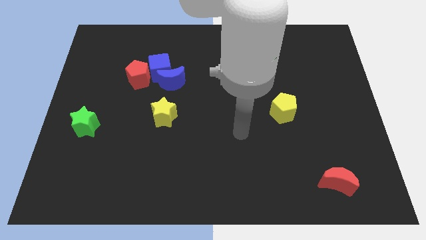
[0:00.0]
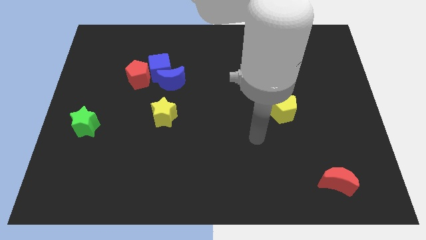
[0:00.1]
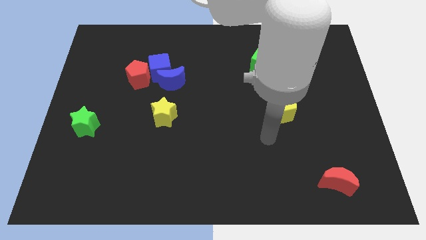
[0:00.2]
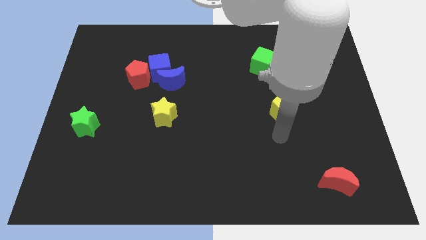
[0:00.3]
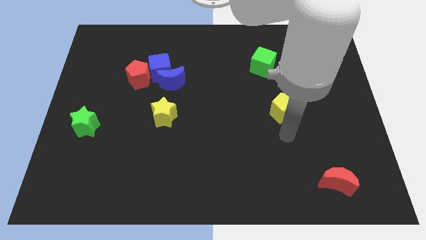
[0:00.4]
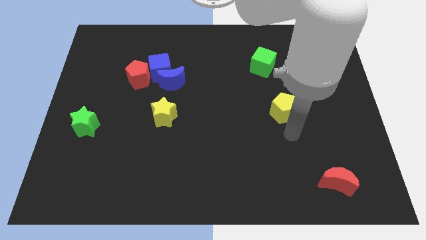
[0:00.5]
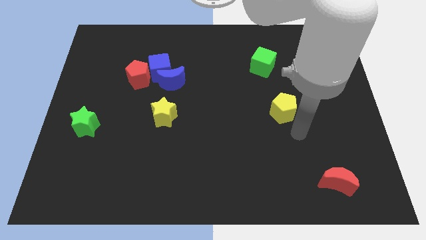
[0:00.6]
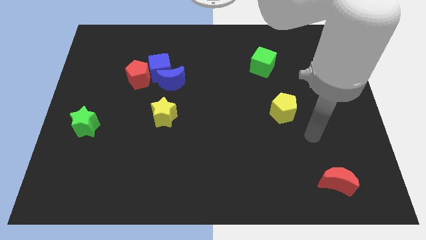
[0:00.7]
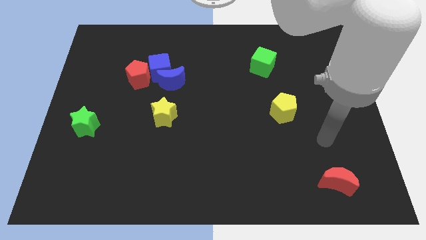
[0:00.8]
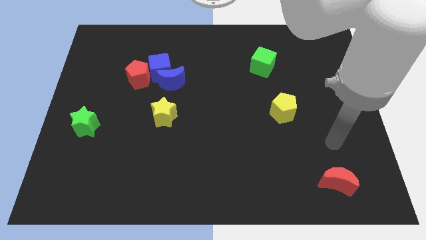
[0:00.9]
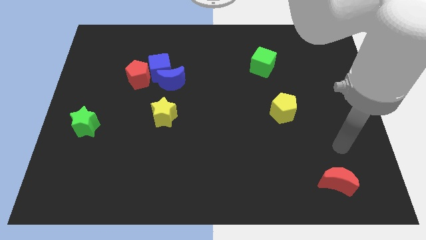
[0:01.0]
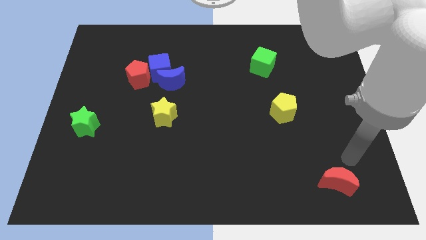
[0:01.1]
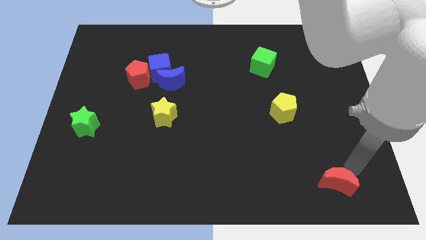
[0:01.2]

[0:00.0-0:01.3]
move your arm towards the red moon

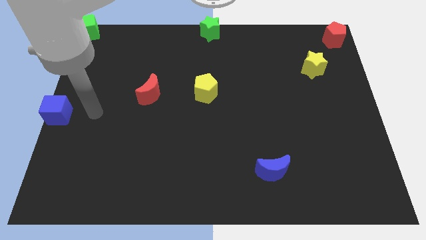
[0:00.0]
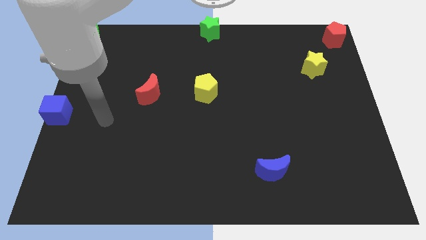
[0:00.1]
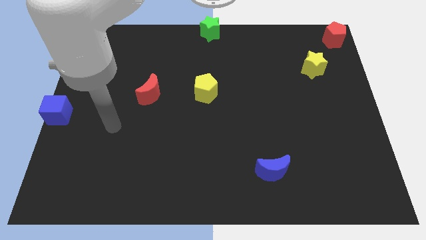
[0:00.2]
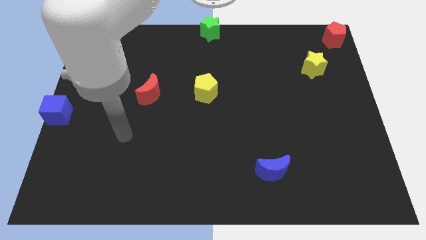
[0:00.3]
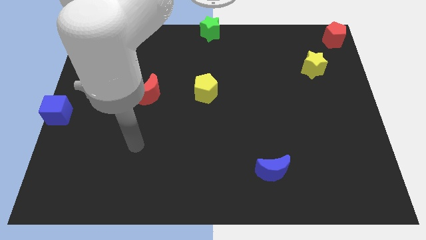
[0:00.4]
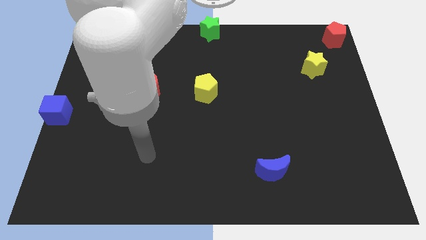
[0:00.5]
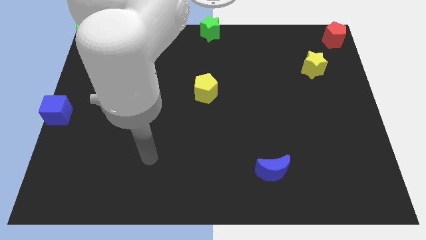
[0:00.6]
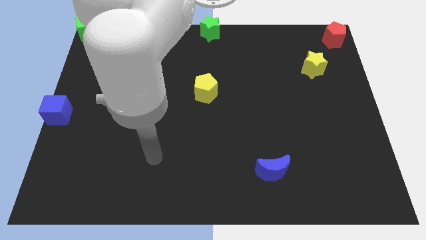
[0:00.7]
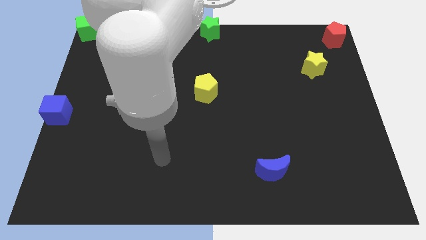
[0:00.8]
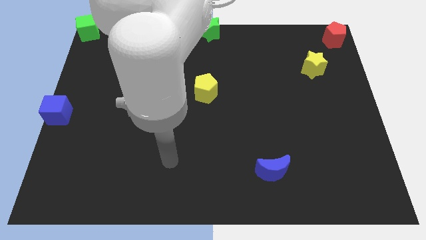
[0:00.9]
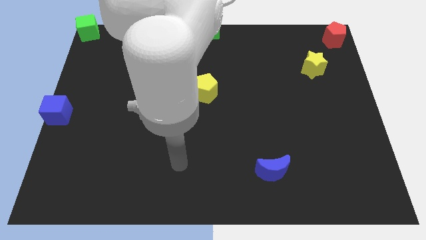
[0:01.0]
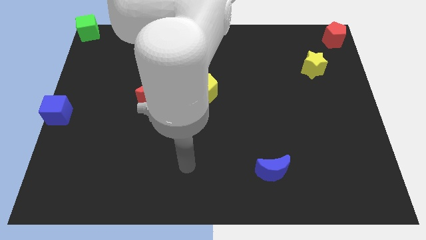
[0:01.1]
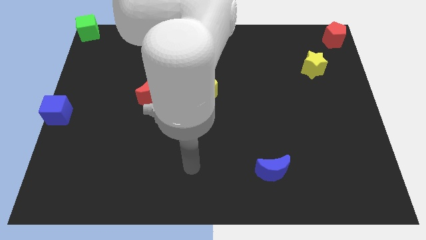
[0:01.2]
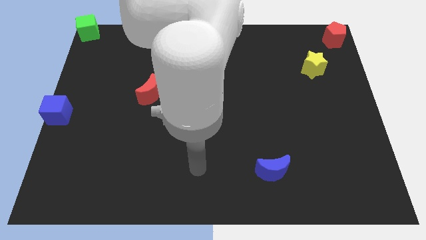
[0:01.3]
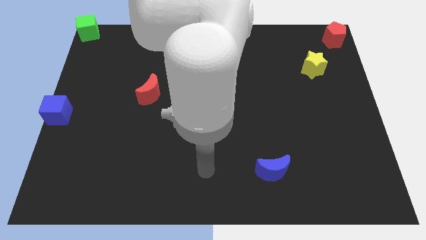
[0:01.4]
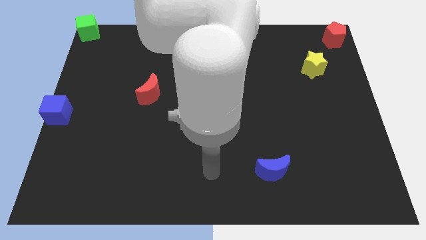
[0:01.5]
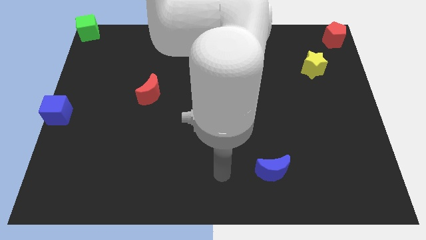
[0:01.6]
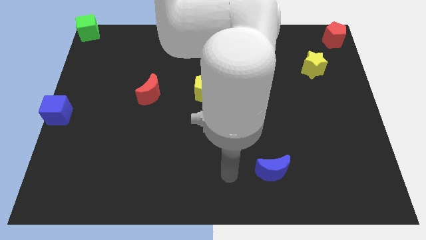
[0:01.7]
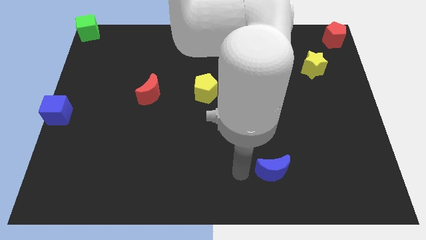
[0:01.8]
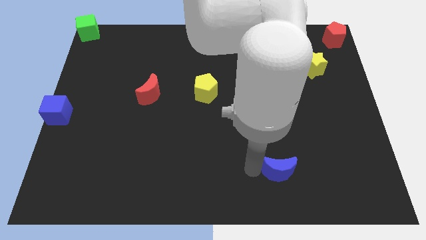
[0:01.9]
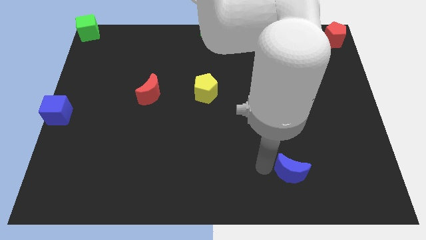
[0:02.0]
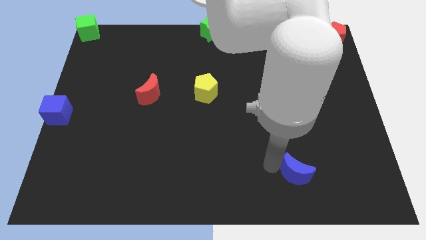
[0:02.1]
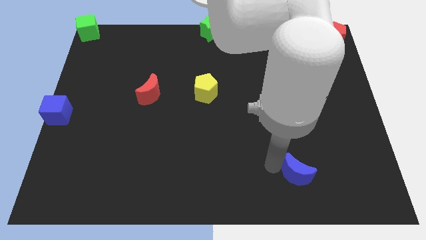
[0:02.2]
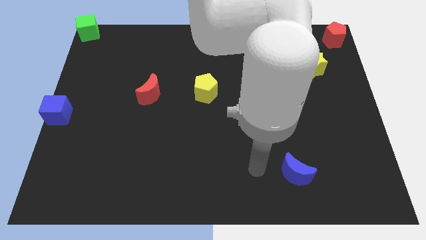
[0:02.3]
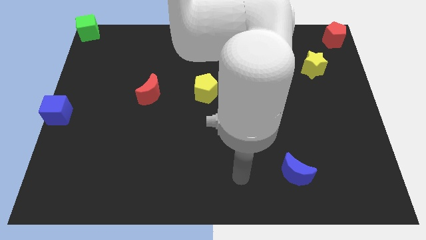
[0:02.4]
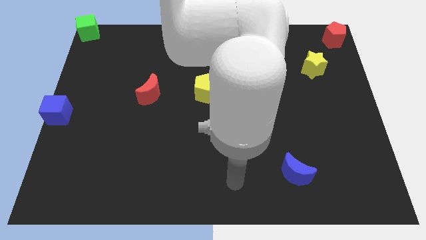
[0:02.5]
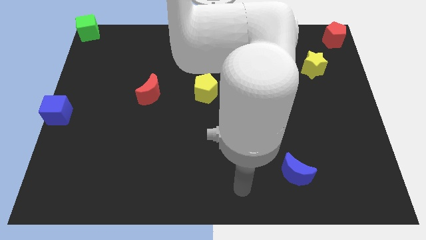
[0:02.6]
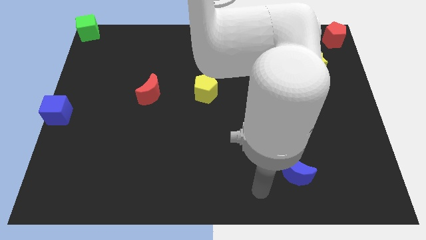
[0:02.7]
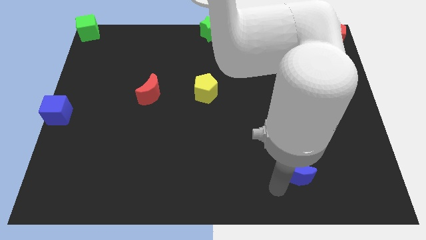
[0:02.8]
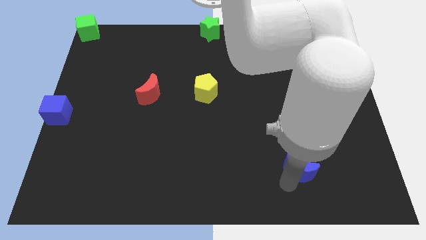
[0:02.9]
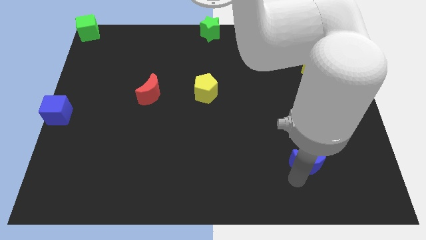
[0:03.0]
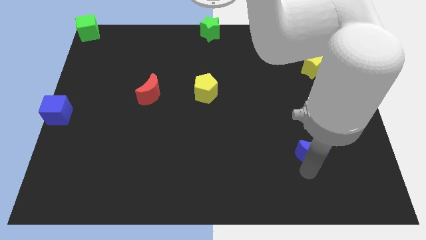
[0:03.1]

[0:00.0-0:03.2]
move the blue crescent towards the yellow star

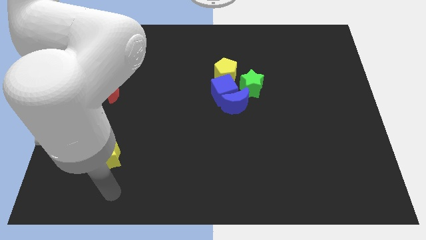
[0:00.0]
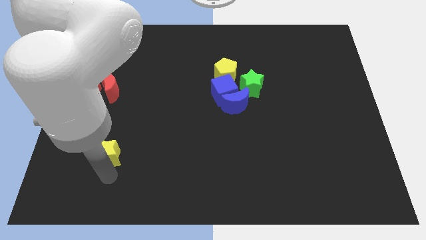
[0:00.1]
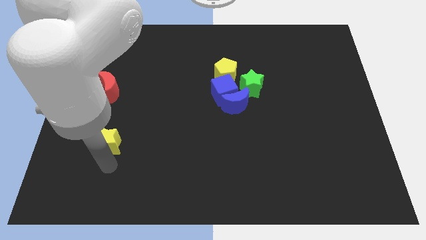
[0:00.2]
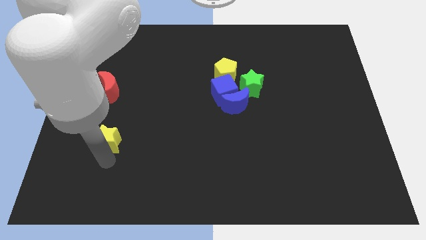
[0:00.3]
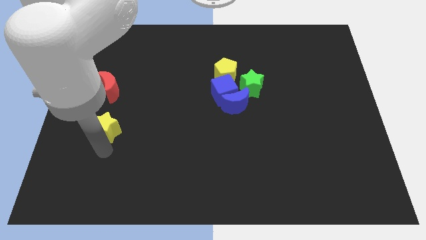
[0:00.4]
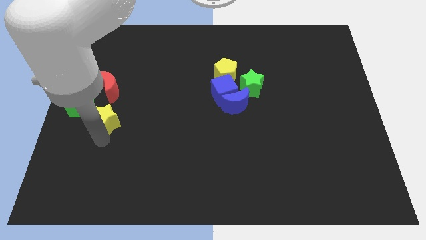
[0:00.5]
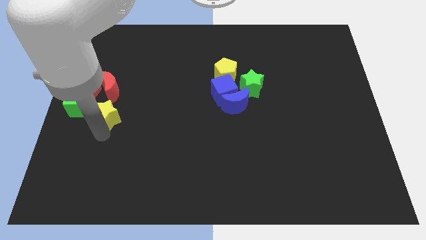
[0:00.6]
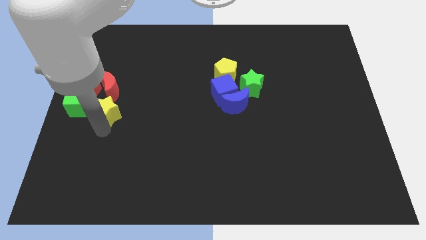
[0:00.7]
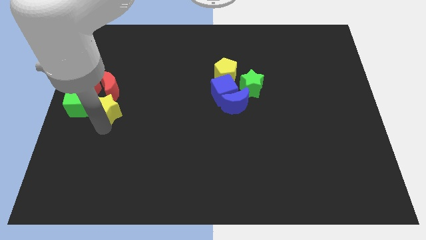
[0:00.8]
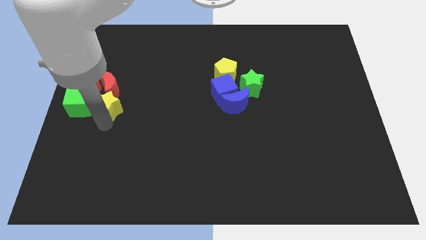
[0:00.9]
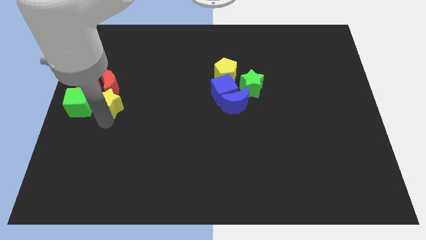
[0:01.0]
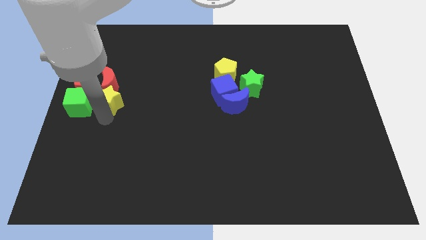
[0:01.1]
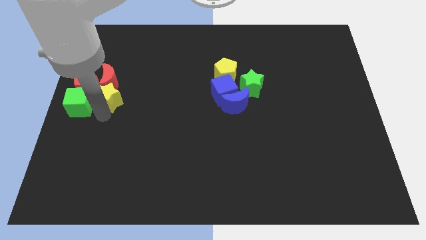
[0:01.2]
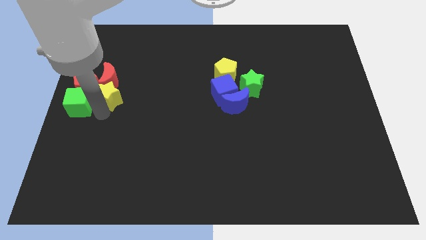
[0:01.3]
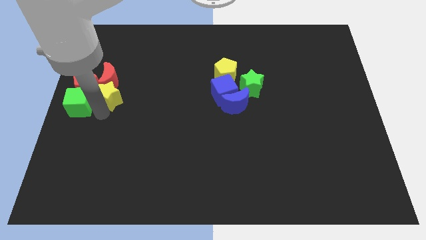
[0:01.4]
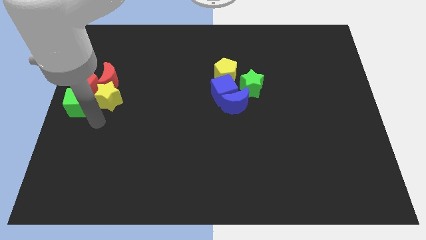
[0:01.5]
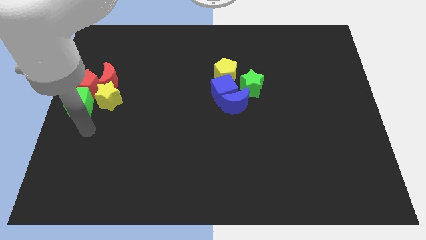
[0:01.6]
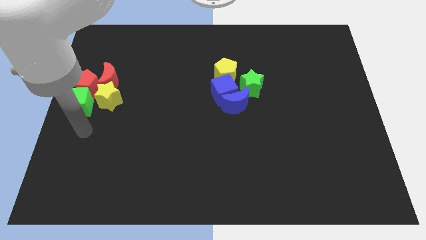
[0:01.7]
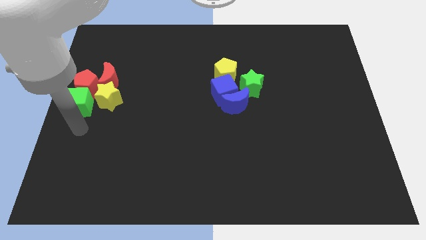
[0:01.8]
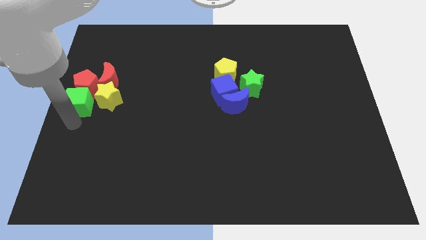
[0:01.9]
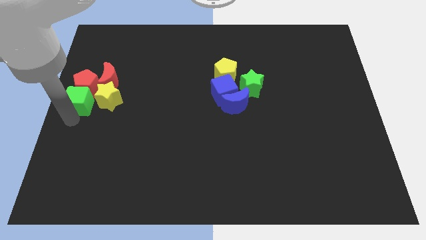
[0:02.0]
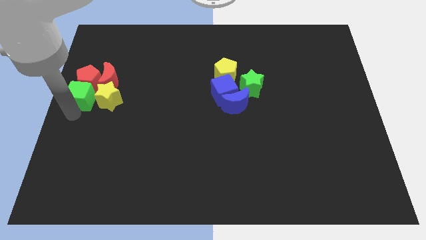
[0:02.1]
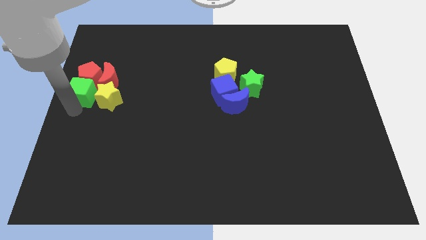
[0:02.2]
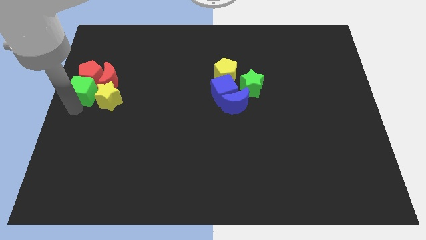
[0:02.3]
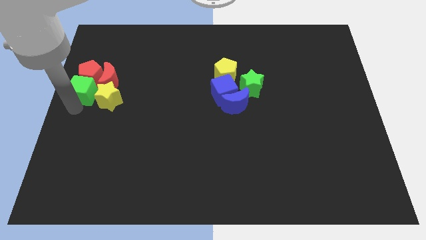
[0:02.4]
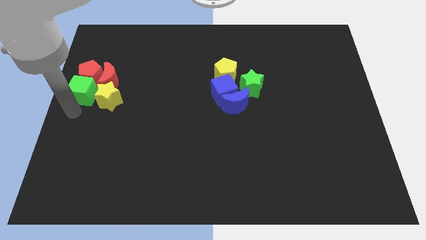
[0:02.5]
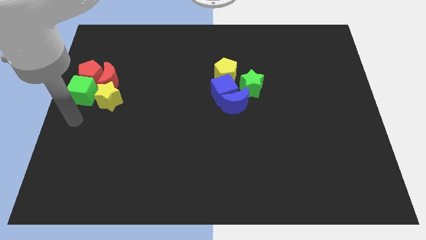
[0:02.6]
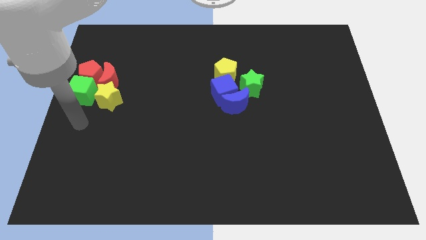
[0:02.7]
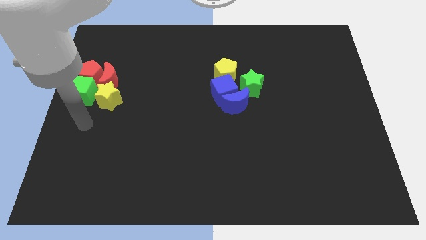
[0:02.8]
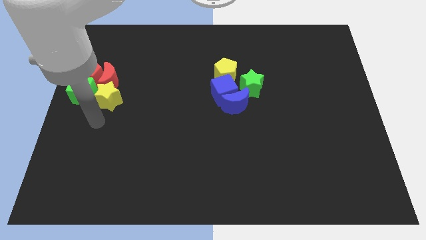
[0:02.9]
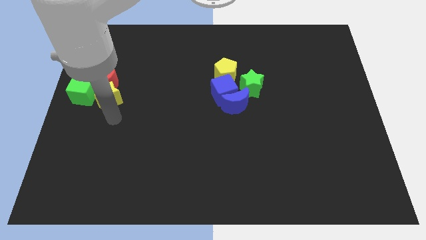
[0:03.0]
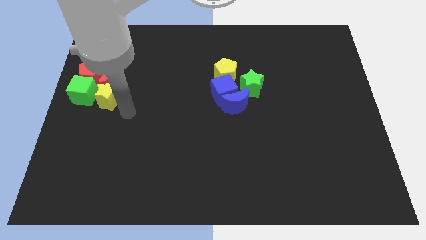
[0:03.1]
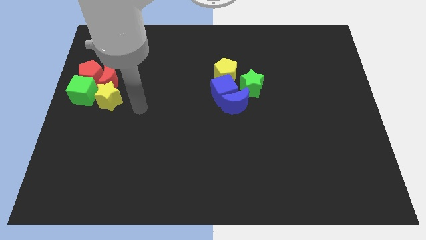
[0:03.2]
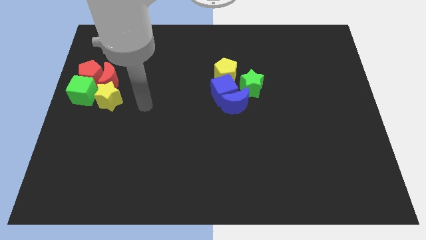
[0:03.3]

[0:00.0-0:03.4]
push the yellow star and green cube into the red blocks

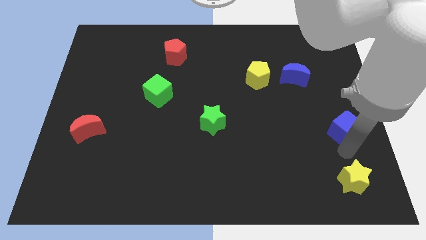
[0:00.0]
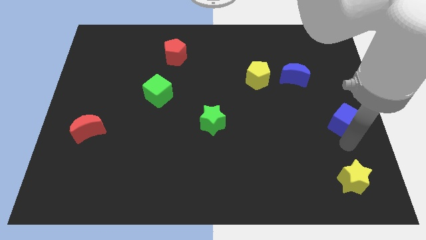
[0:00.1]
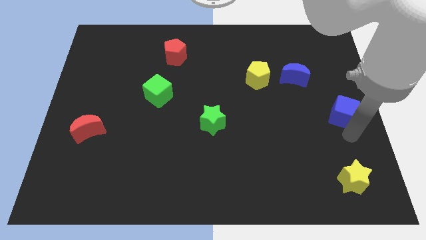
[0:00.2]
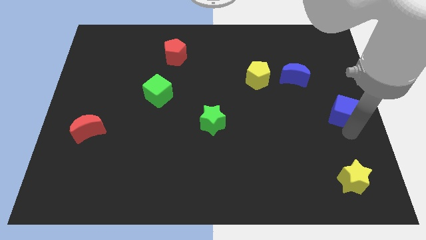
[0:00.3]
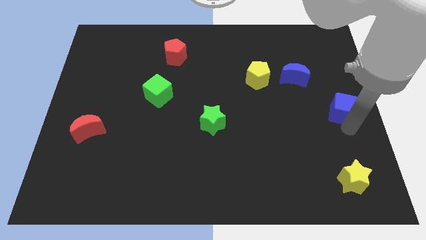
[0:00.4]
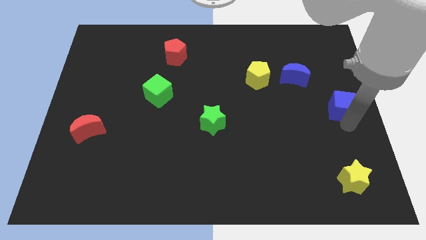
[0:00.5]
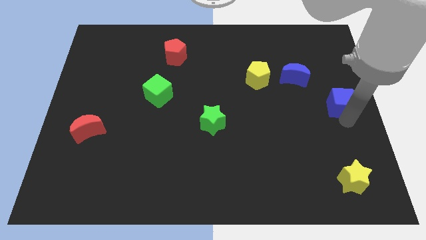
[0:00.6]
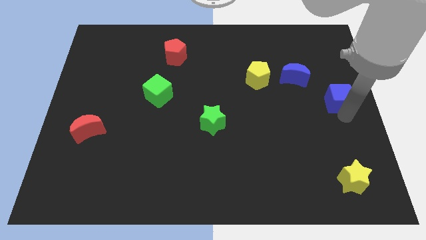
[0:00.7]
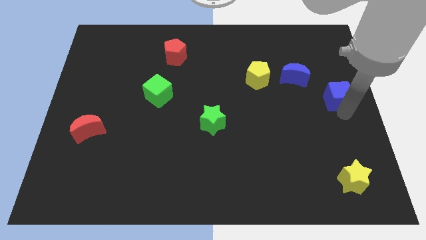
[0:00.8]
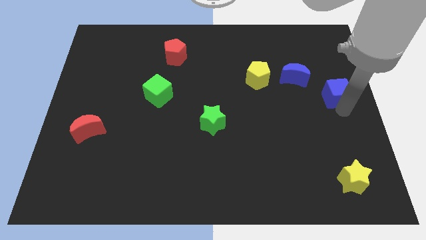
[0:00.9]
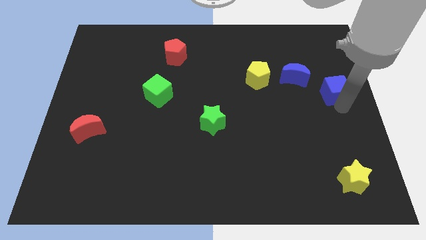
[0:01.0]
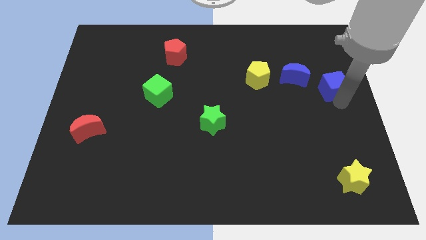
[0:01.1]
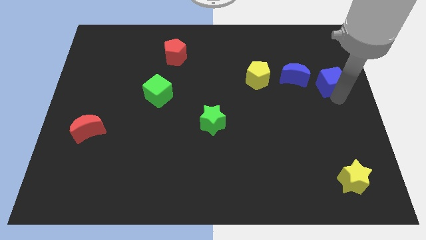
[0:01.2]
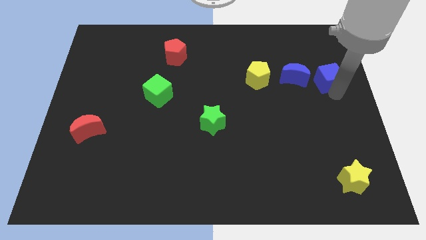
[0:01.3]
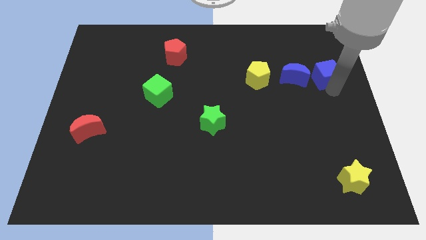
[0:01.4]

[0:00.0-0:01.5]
move the blue cube to the right of the blue crescent
